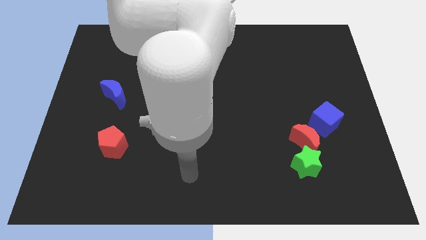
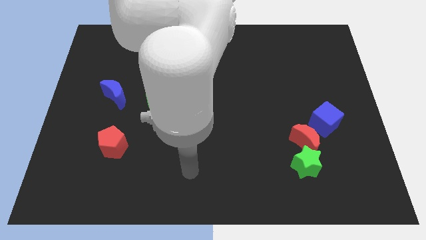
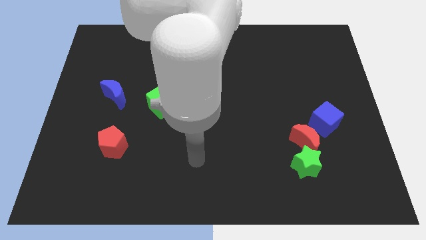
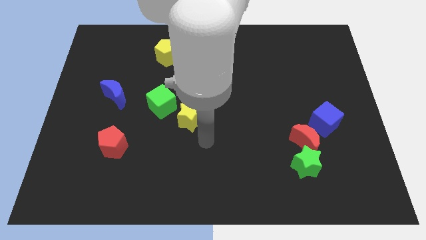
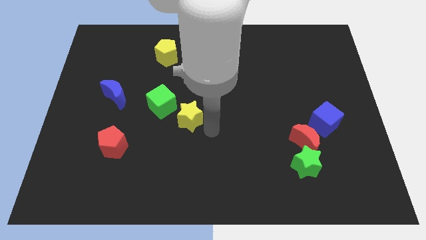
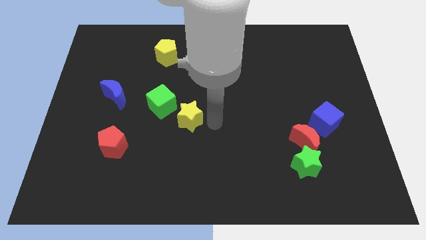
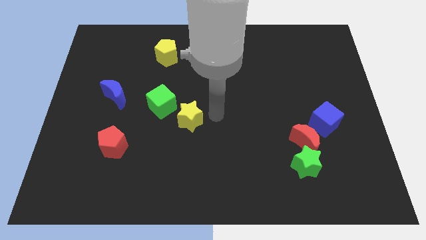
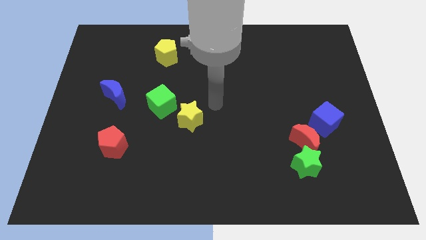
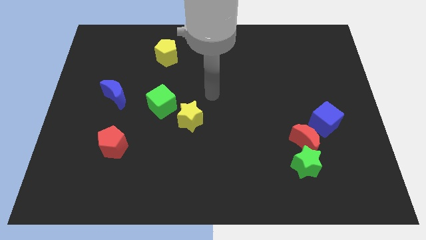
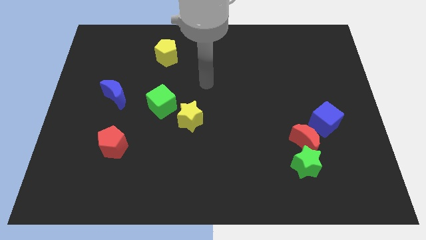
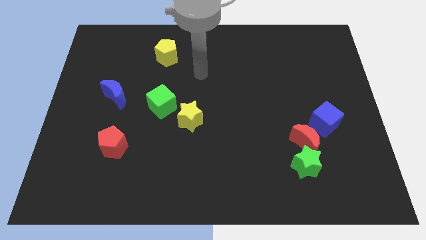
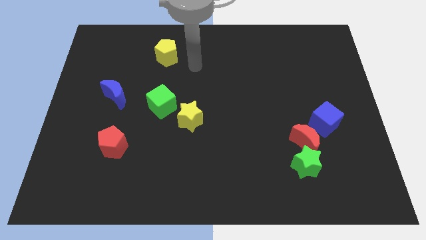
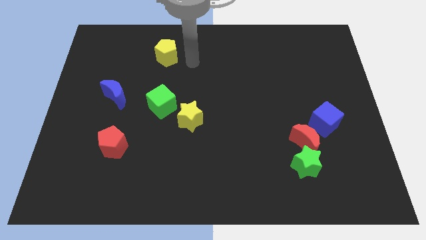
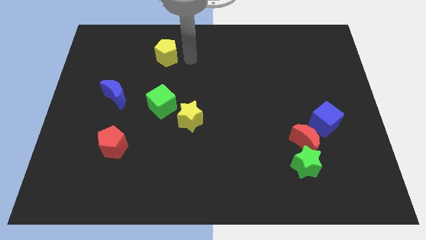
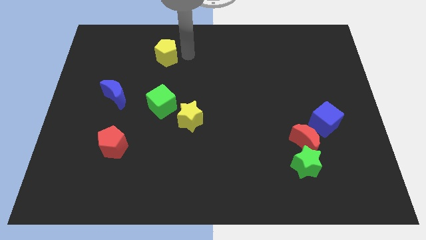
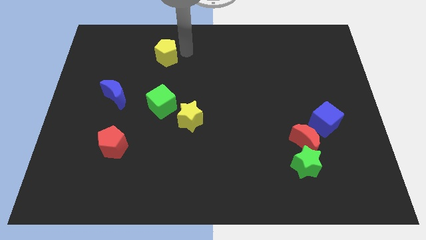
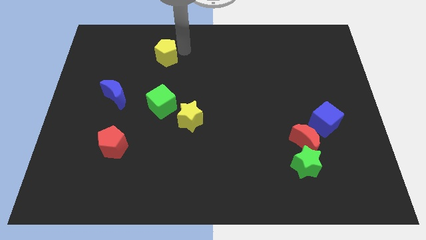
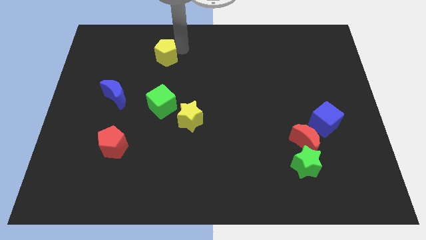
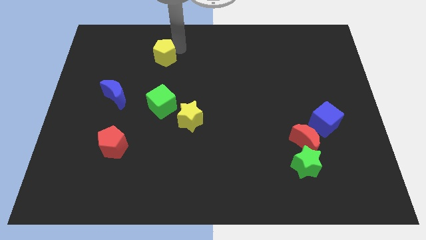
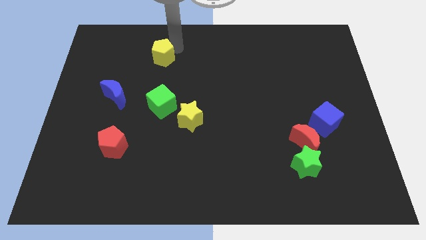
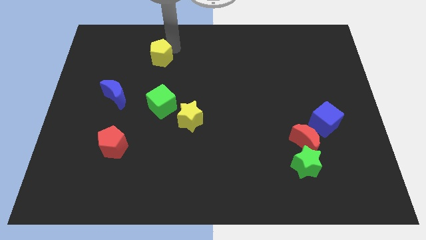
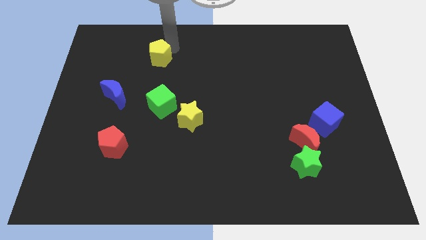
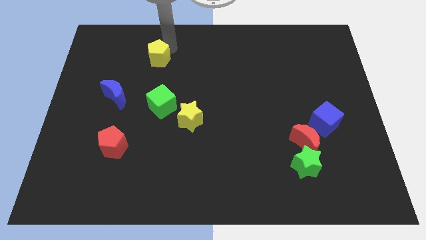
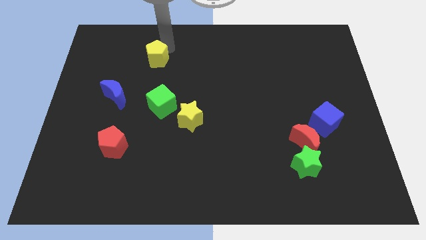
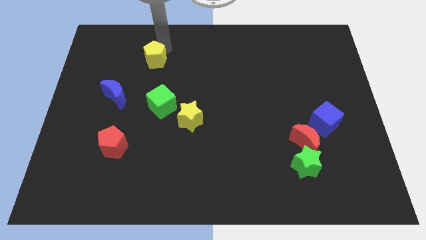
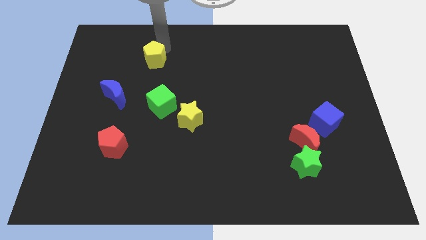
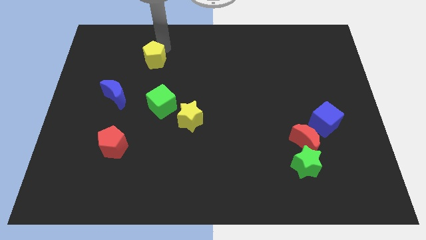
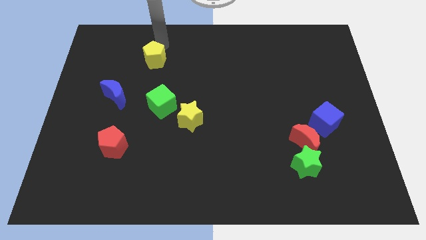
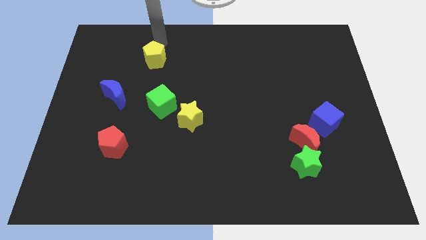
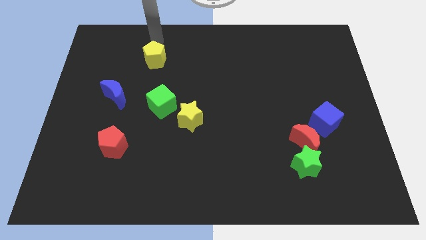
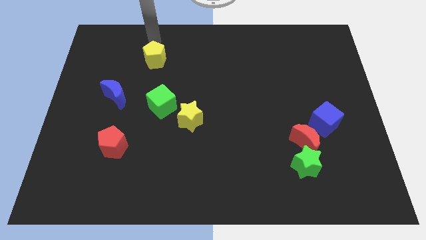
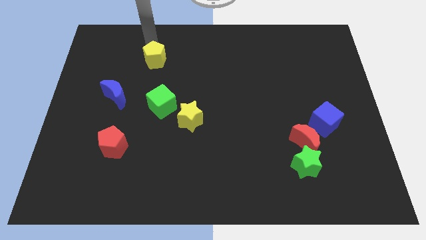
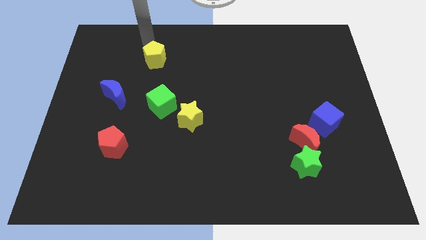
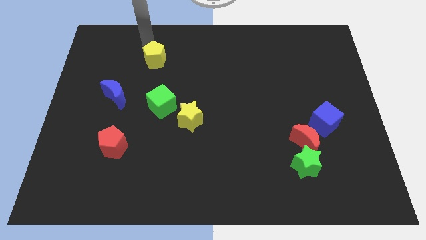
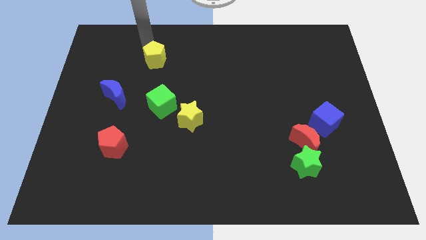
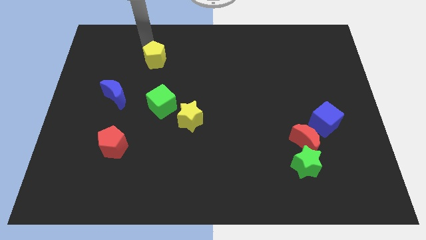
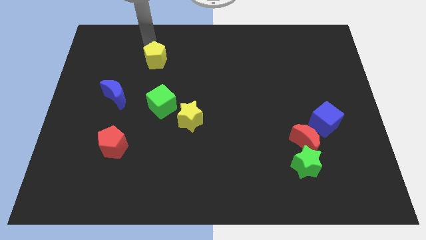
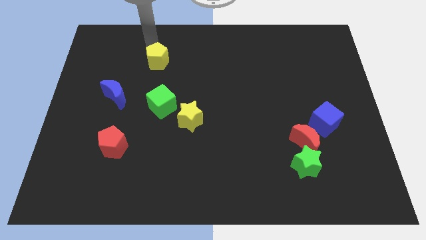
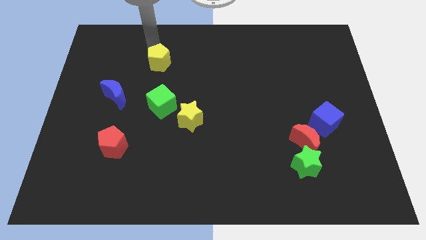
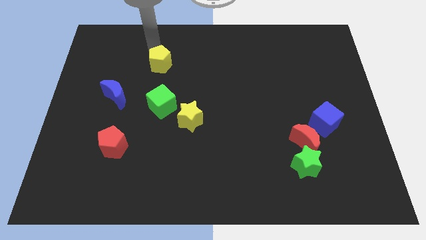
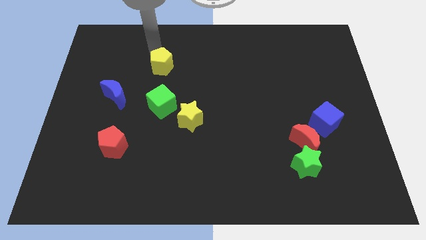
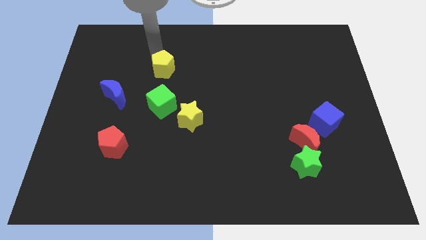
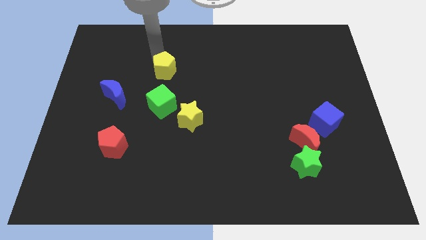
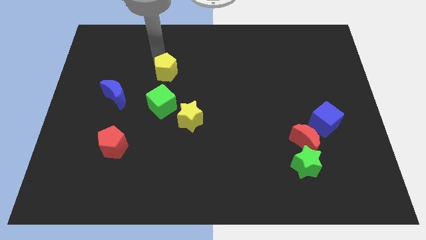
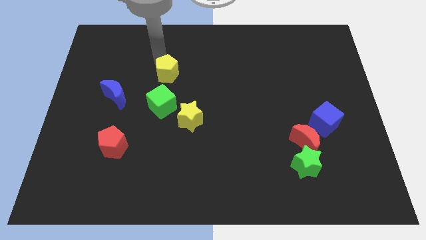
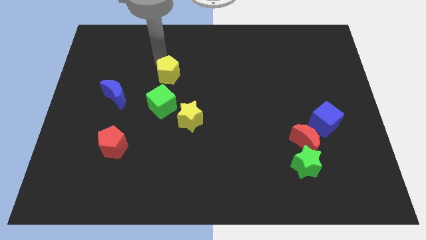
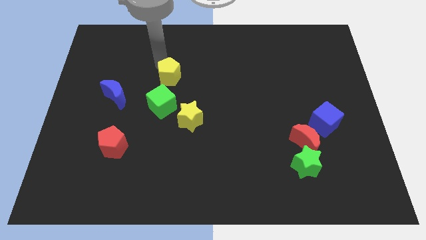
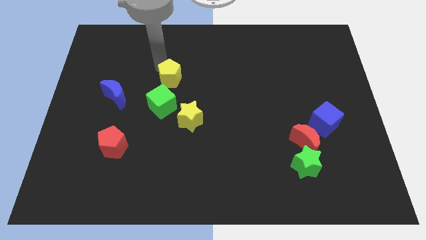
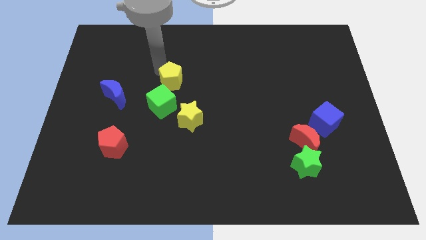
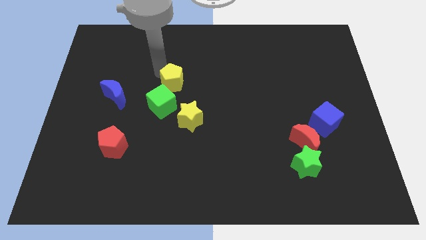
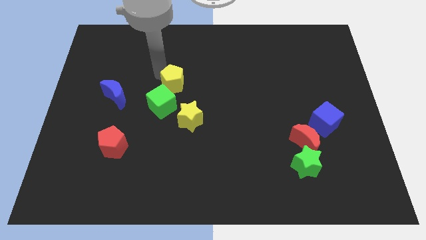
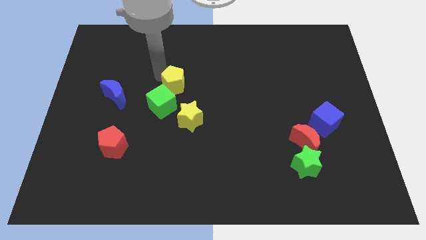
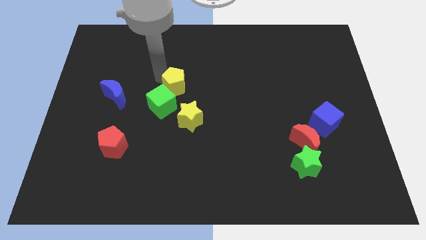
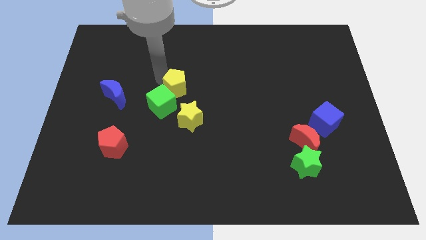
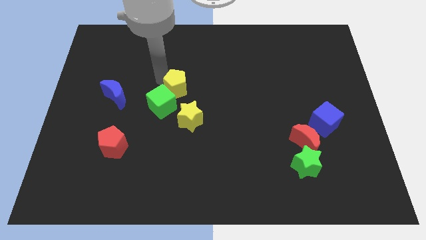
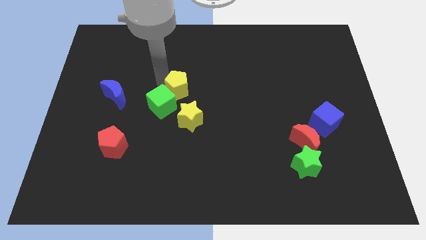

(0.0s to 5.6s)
put the yellow pentagon to the green cube

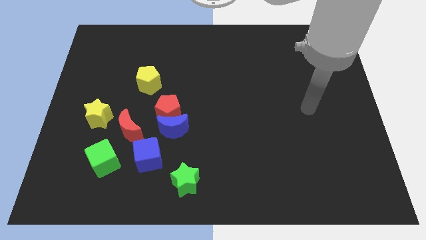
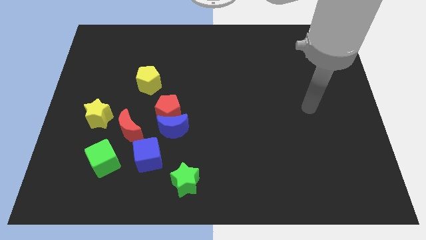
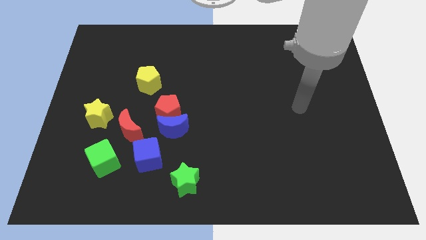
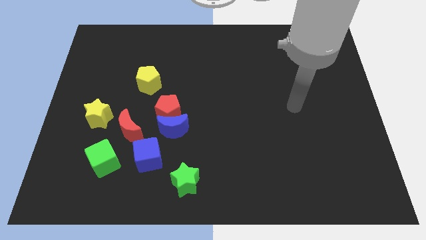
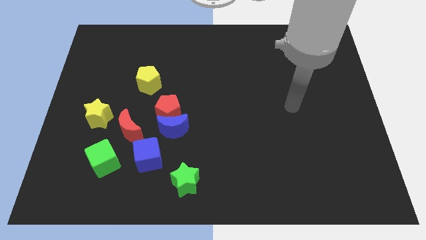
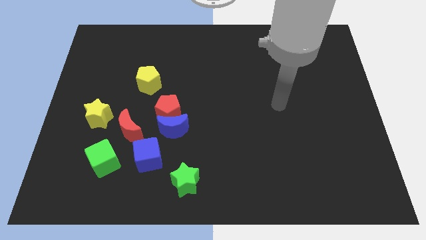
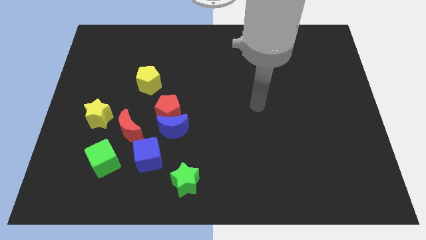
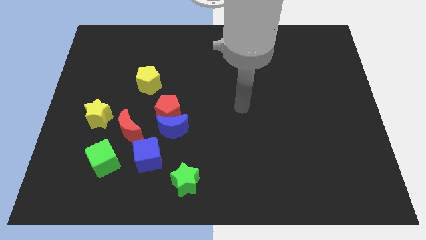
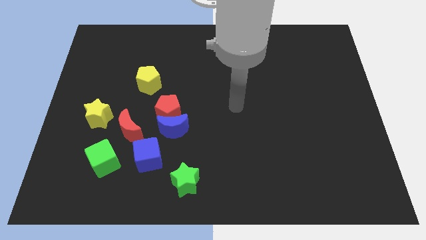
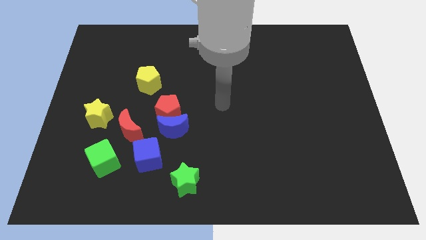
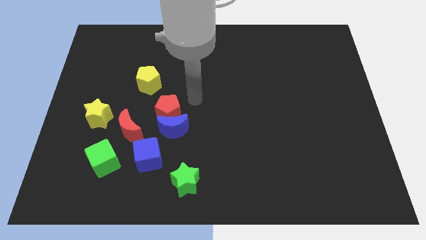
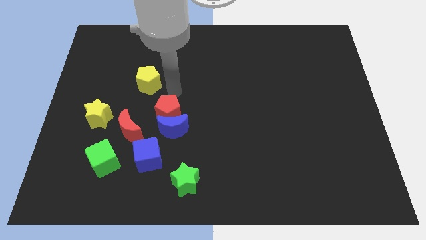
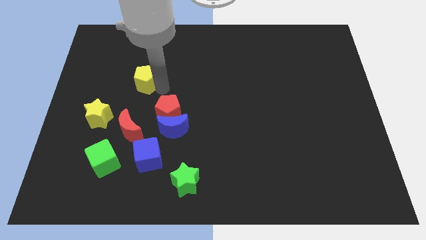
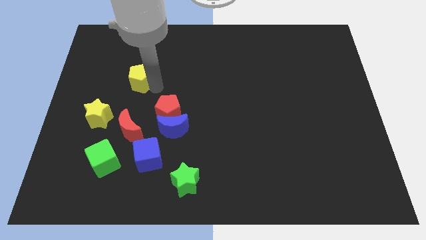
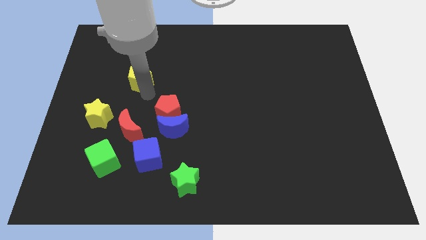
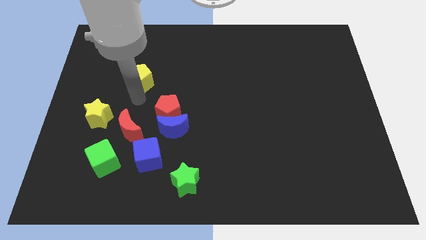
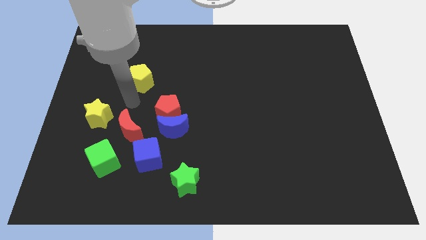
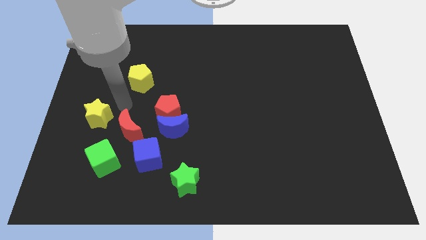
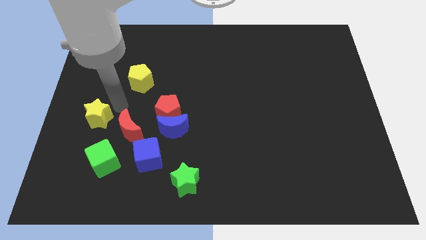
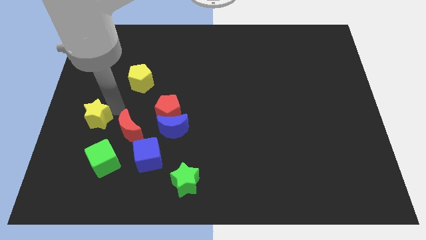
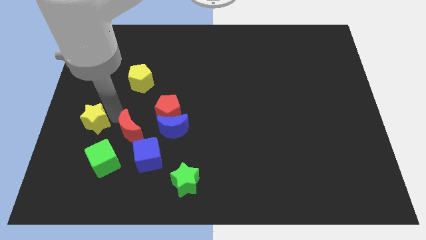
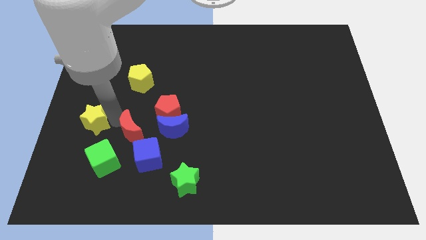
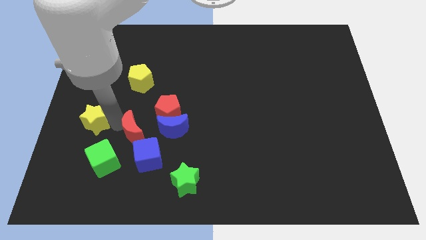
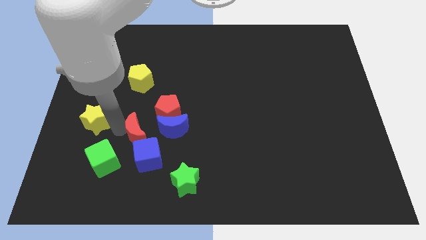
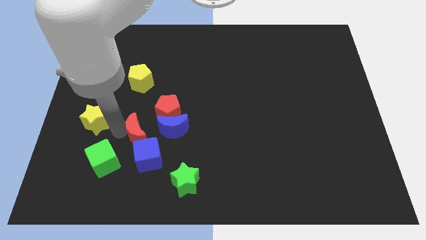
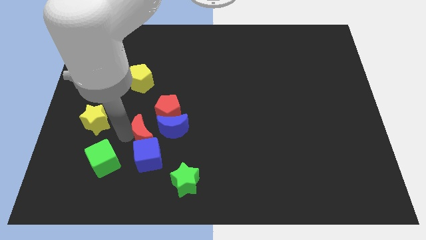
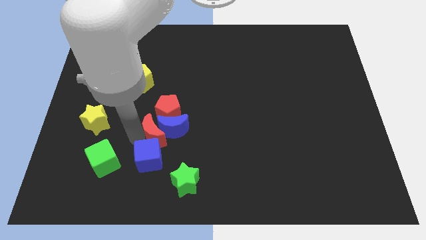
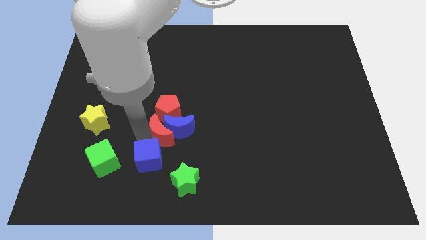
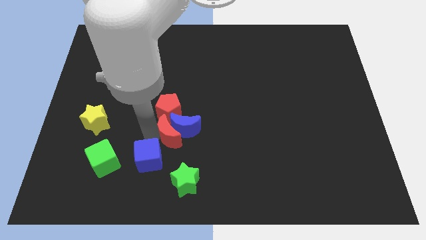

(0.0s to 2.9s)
move the red moon next to the blue moon
